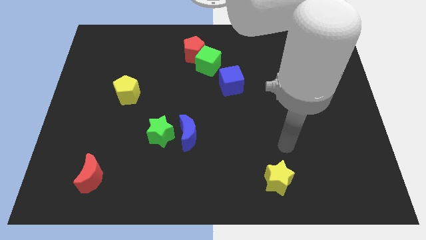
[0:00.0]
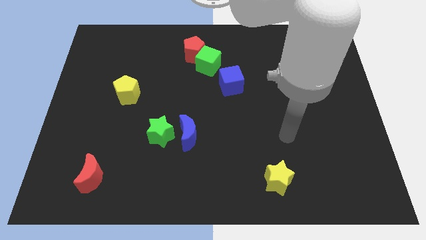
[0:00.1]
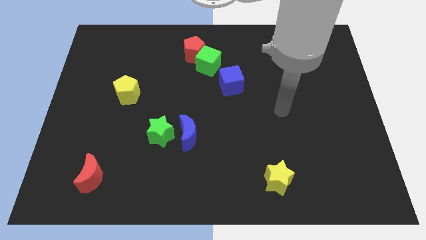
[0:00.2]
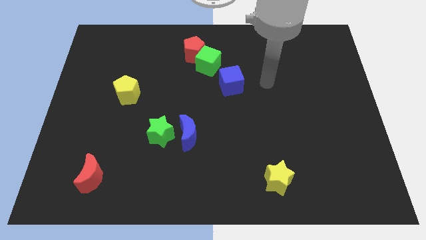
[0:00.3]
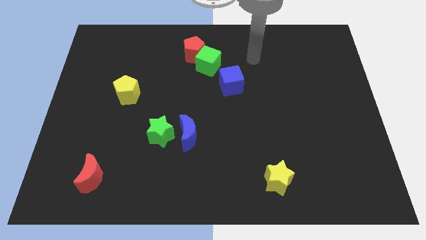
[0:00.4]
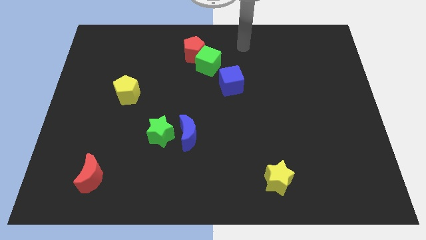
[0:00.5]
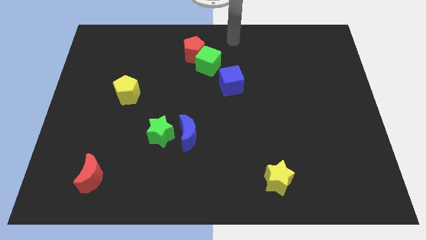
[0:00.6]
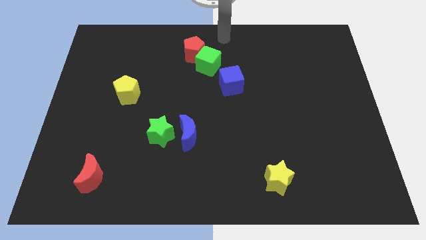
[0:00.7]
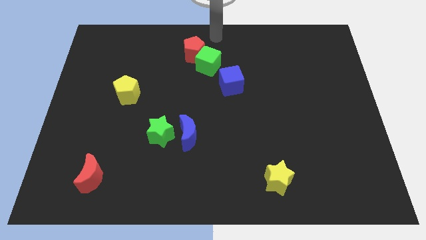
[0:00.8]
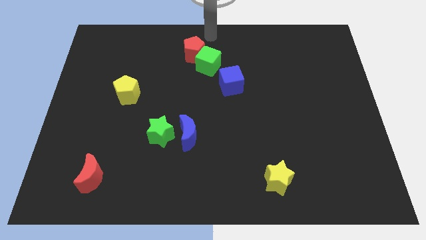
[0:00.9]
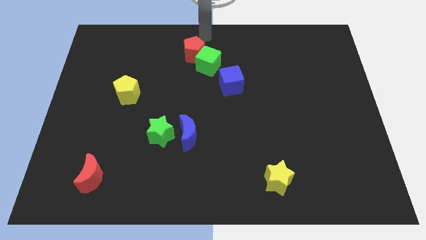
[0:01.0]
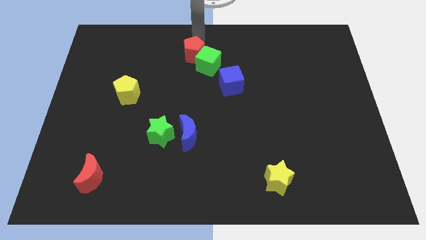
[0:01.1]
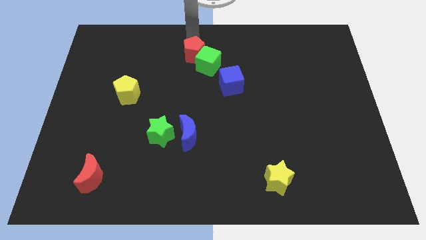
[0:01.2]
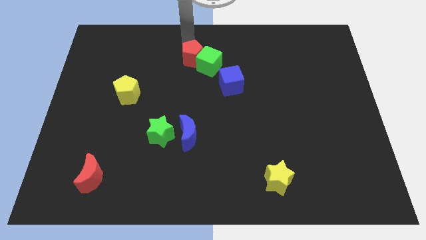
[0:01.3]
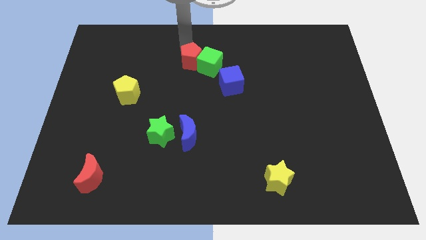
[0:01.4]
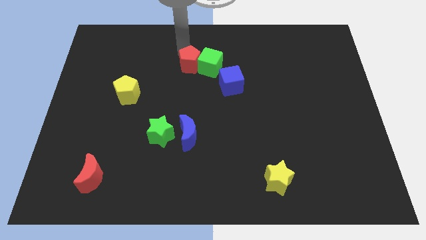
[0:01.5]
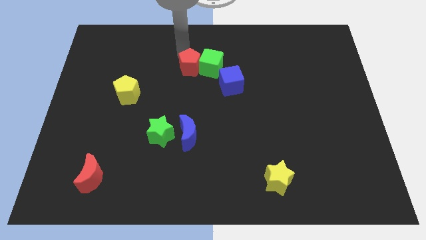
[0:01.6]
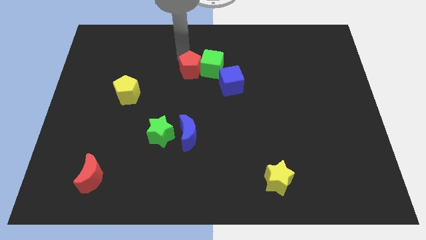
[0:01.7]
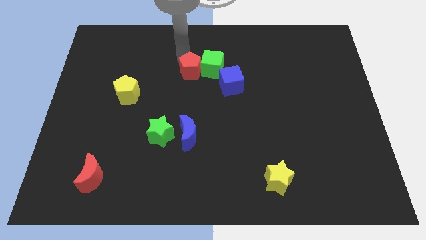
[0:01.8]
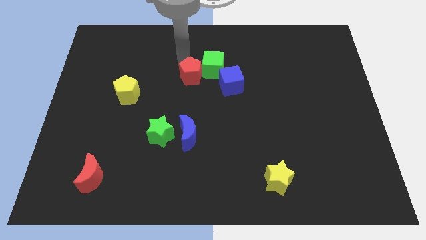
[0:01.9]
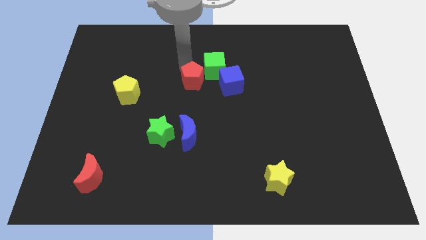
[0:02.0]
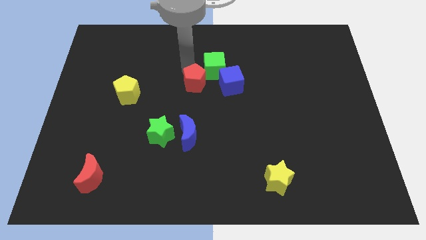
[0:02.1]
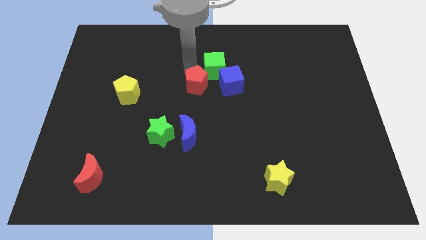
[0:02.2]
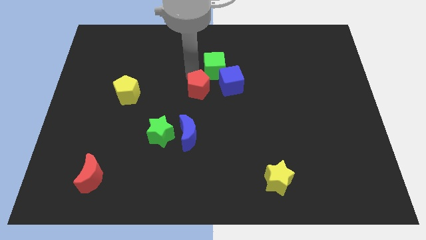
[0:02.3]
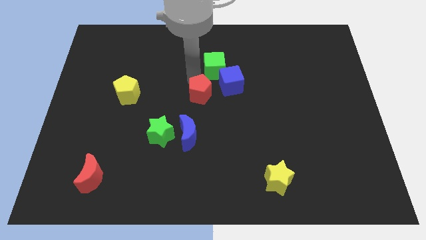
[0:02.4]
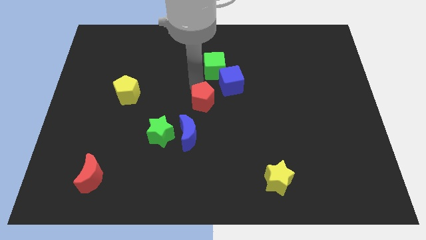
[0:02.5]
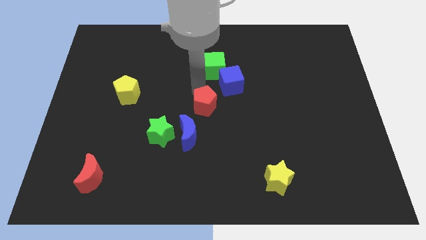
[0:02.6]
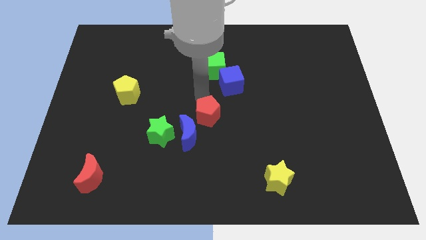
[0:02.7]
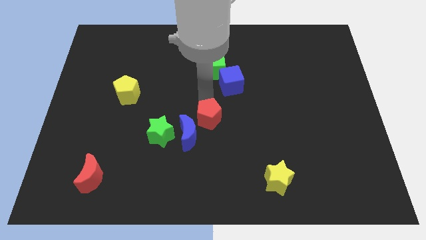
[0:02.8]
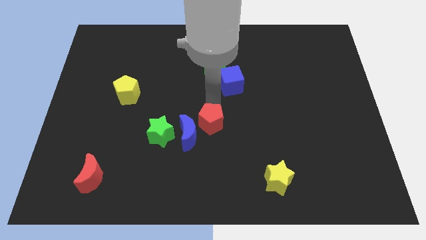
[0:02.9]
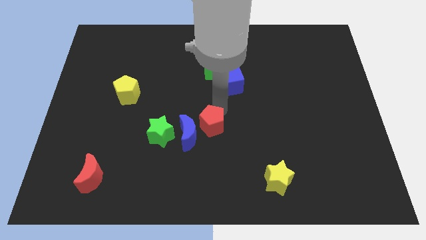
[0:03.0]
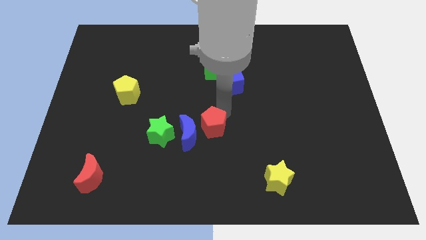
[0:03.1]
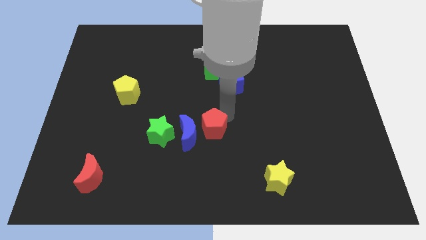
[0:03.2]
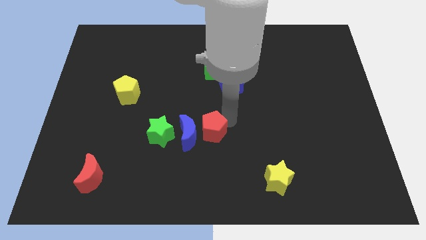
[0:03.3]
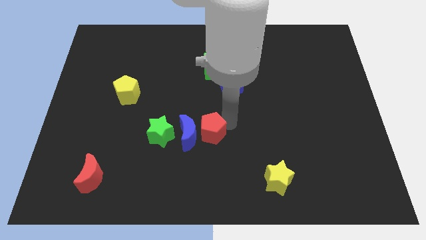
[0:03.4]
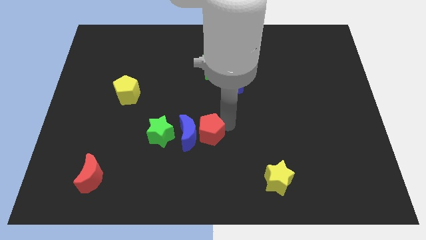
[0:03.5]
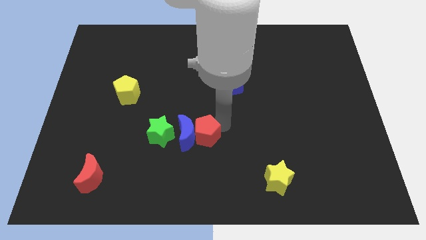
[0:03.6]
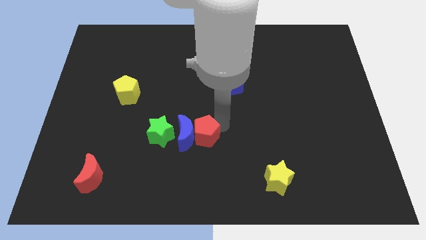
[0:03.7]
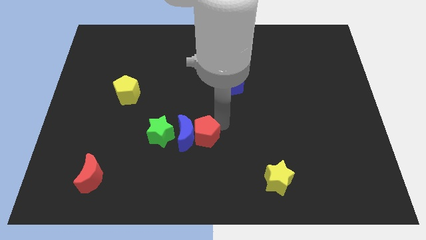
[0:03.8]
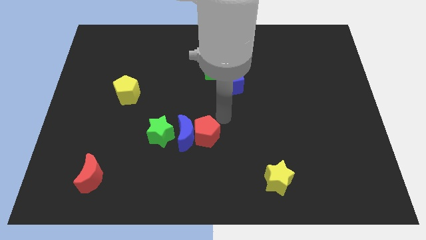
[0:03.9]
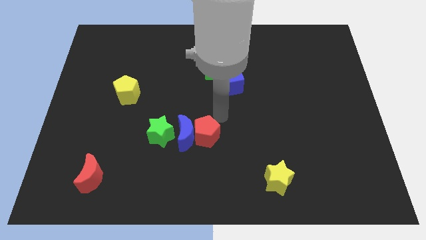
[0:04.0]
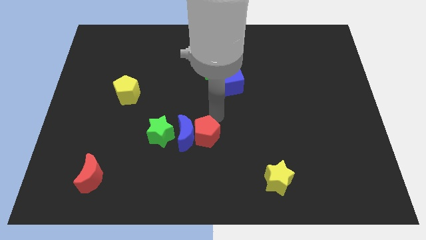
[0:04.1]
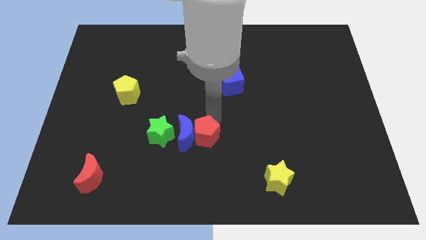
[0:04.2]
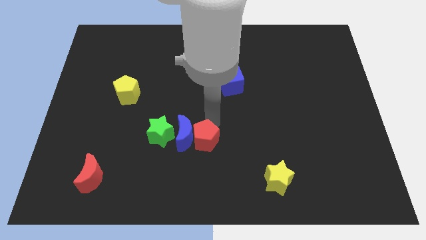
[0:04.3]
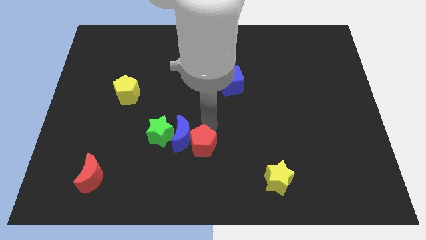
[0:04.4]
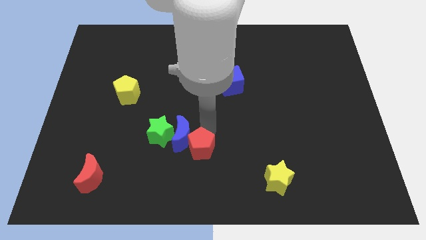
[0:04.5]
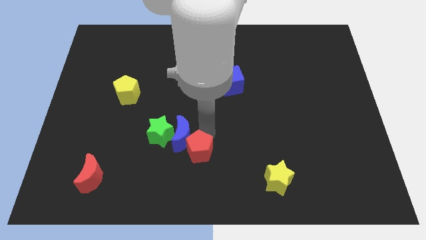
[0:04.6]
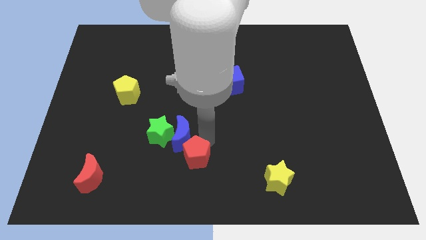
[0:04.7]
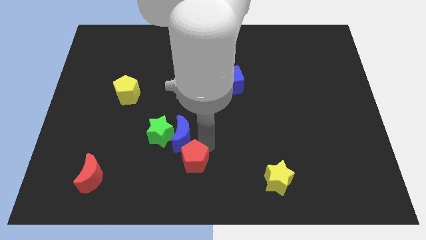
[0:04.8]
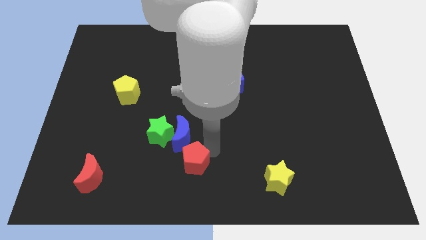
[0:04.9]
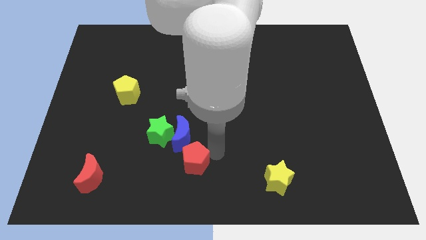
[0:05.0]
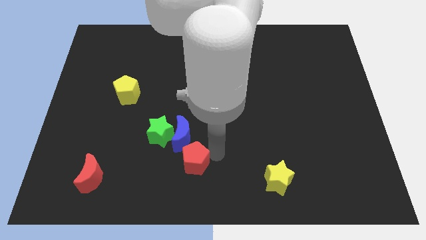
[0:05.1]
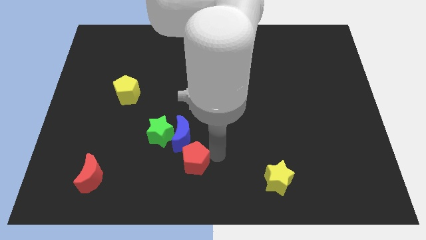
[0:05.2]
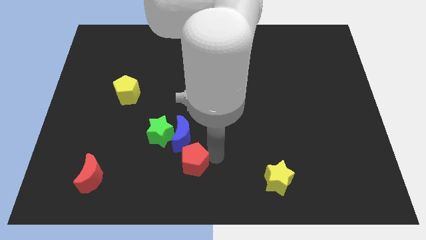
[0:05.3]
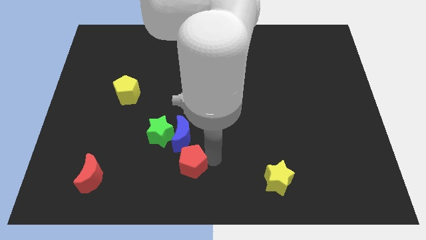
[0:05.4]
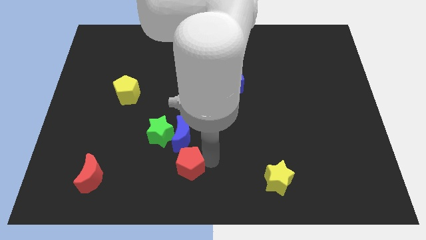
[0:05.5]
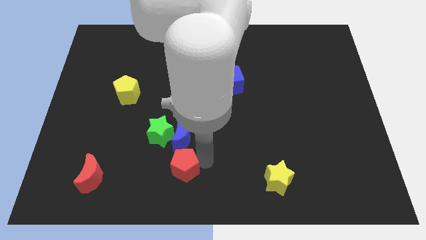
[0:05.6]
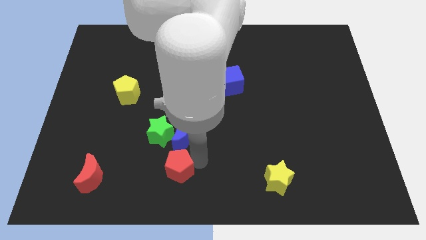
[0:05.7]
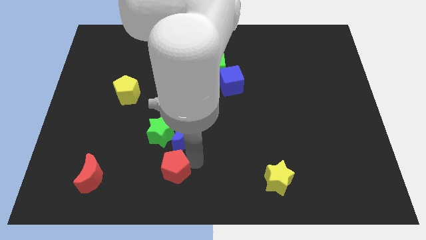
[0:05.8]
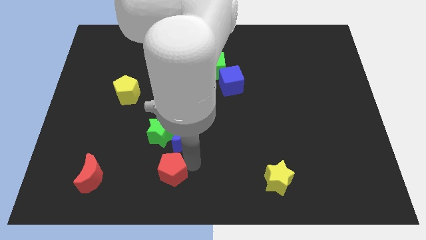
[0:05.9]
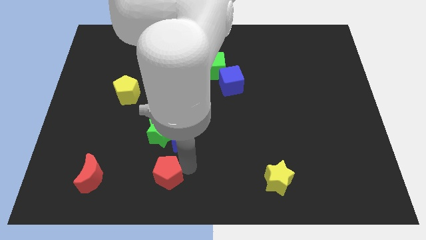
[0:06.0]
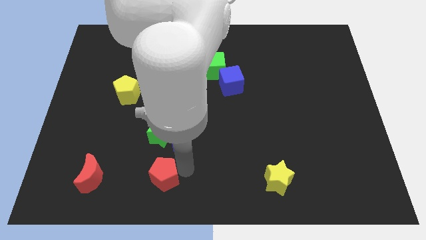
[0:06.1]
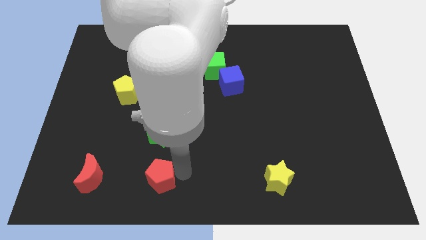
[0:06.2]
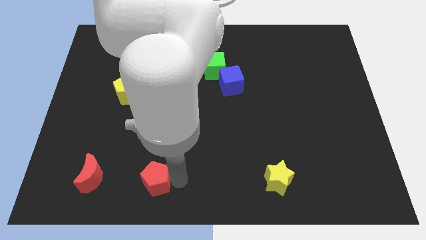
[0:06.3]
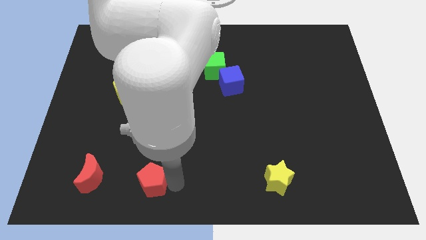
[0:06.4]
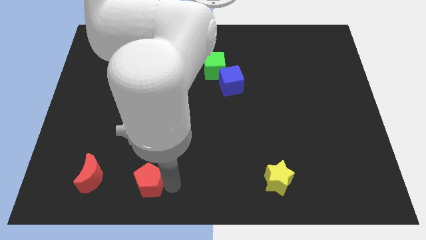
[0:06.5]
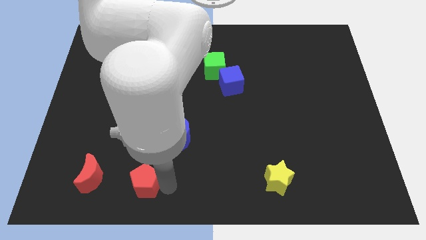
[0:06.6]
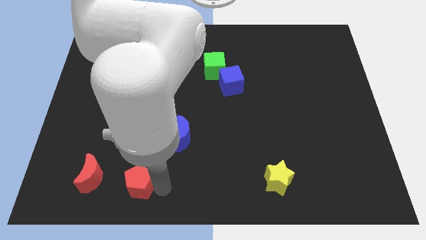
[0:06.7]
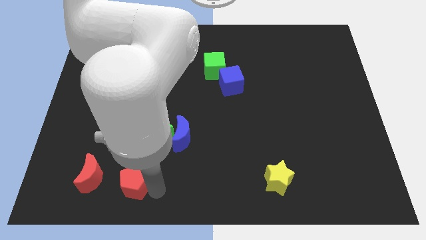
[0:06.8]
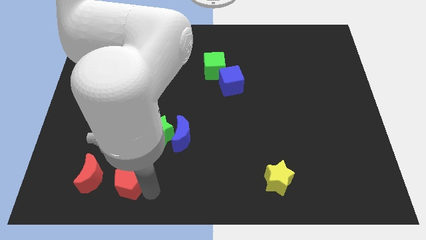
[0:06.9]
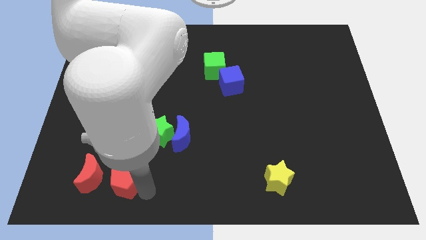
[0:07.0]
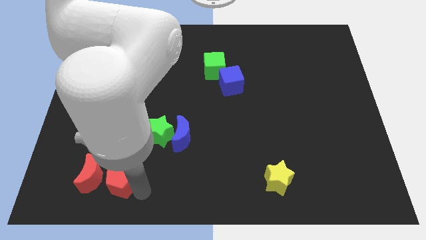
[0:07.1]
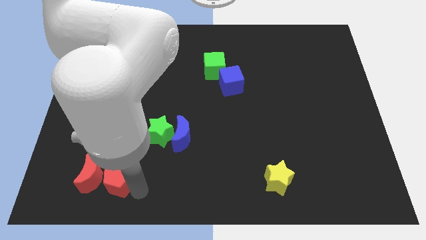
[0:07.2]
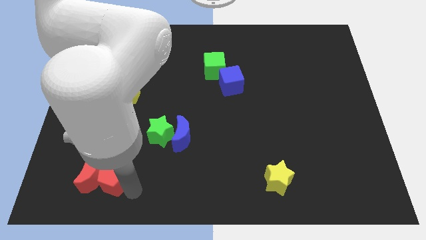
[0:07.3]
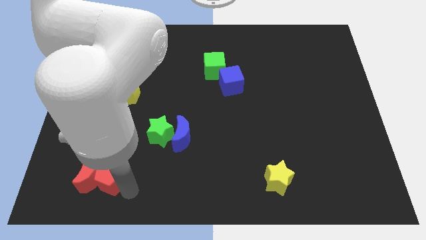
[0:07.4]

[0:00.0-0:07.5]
push the red pentagon towards the red moon

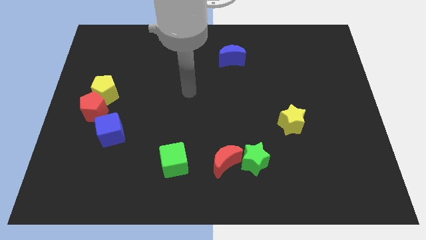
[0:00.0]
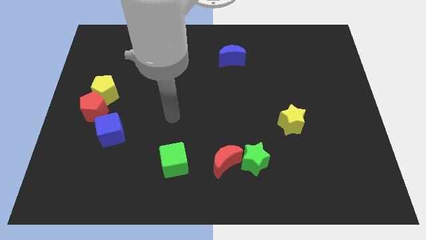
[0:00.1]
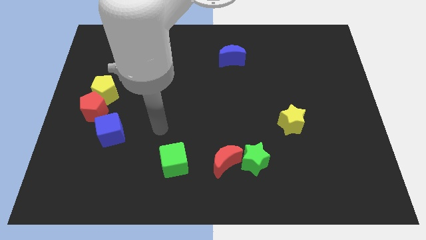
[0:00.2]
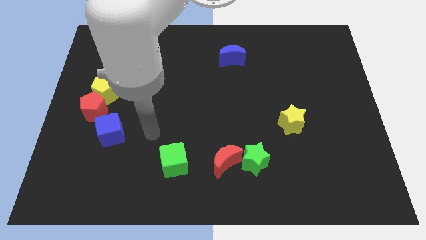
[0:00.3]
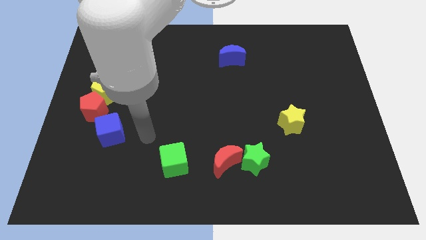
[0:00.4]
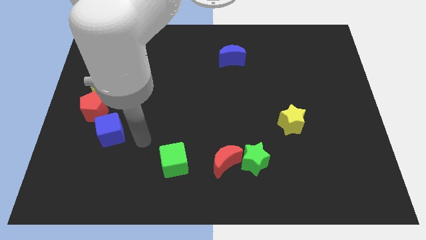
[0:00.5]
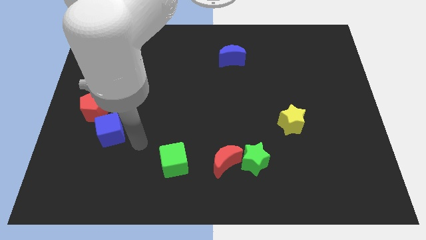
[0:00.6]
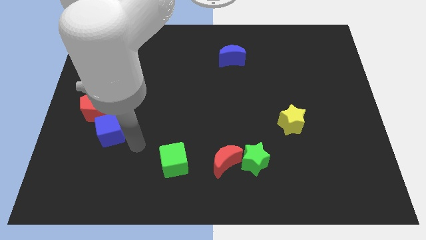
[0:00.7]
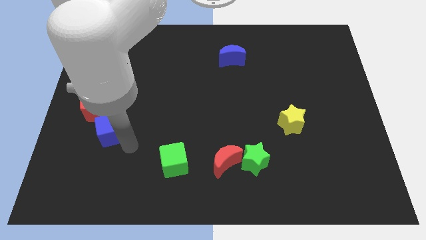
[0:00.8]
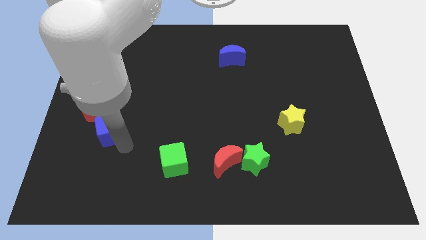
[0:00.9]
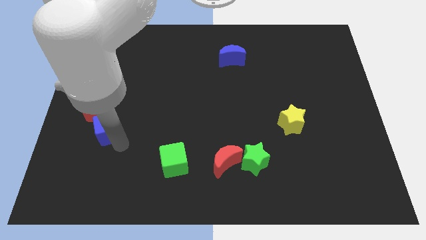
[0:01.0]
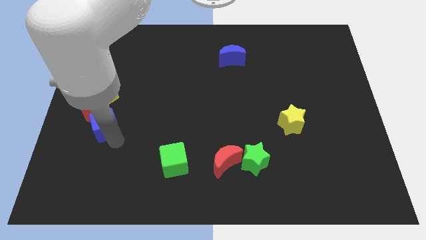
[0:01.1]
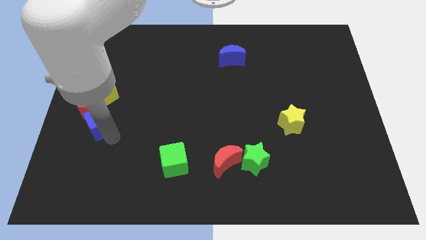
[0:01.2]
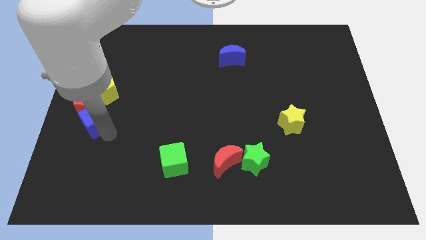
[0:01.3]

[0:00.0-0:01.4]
push the blue cube to the red pentagon
